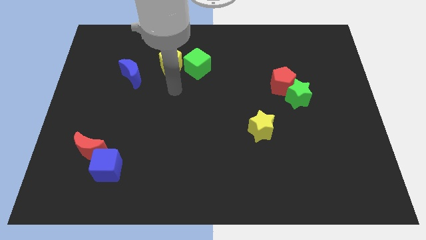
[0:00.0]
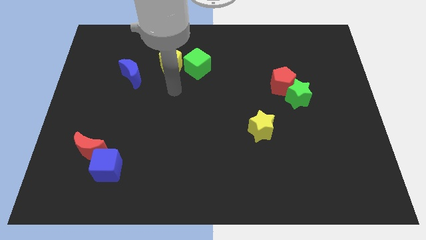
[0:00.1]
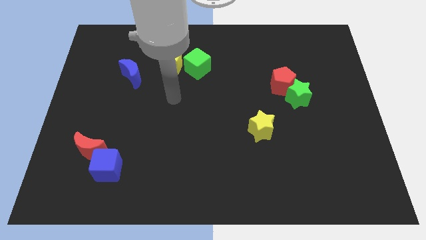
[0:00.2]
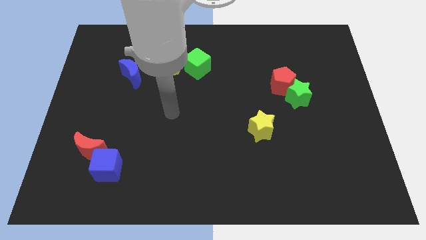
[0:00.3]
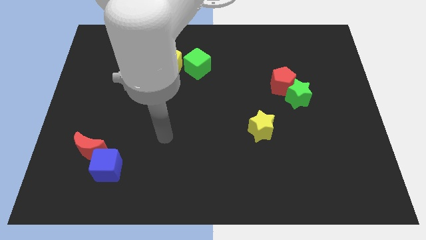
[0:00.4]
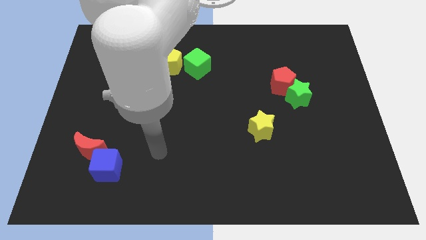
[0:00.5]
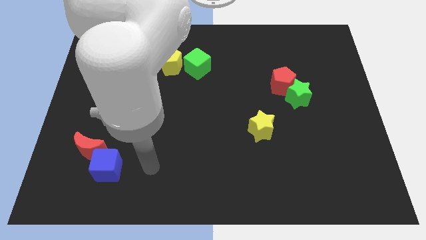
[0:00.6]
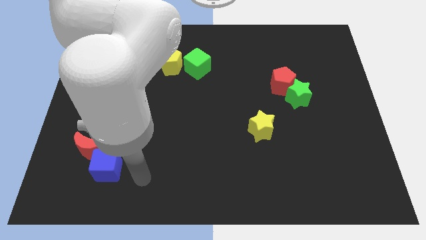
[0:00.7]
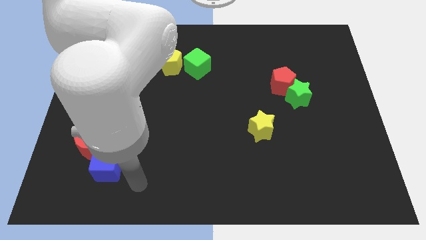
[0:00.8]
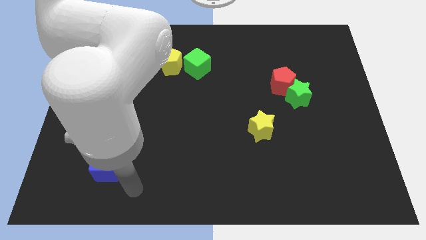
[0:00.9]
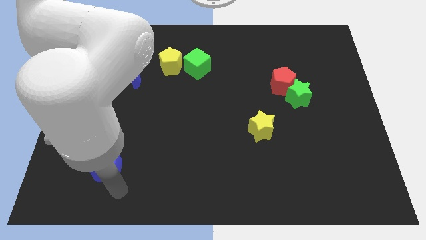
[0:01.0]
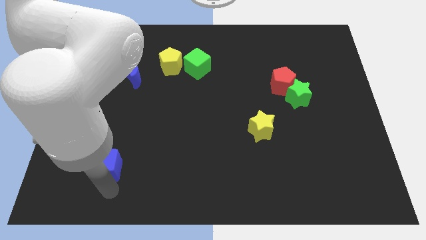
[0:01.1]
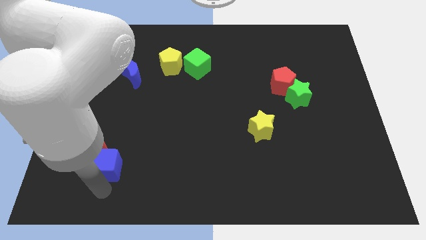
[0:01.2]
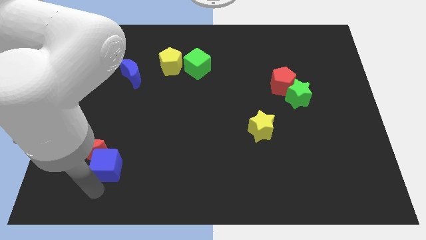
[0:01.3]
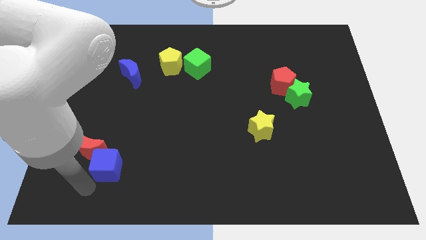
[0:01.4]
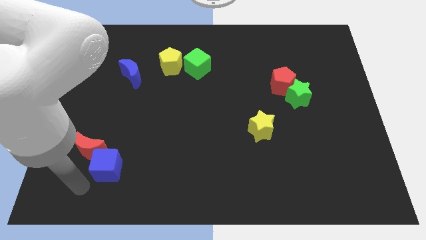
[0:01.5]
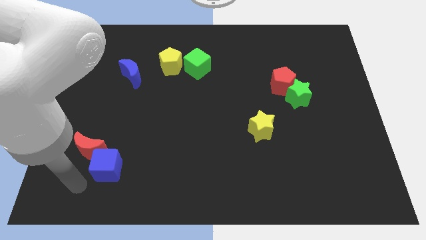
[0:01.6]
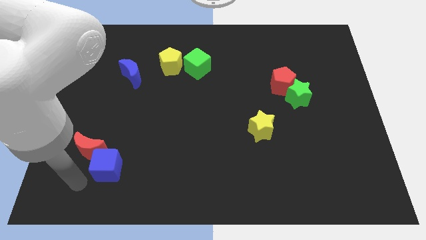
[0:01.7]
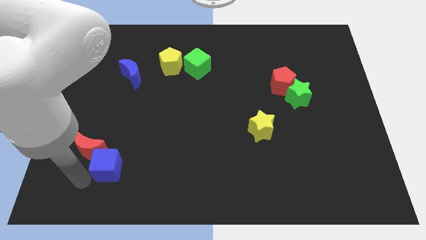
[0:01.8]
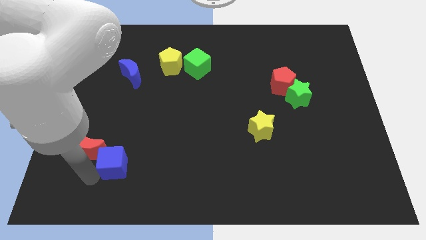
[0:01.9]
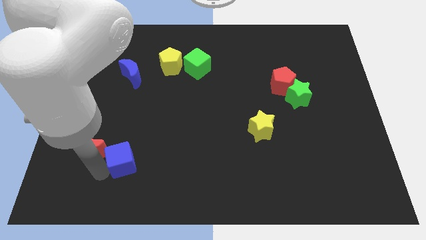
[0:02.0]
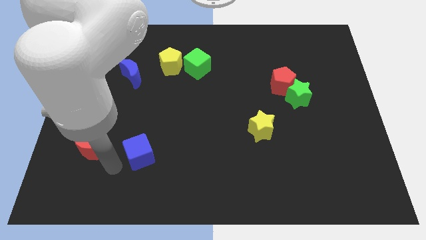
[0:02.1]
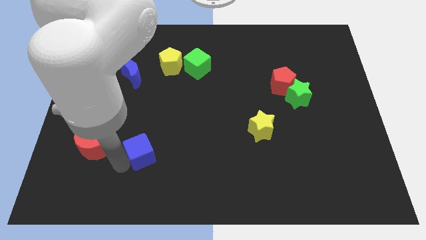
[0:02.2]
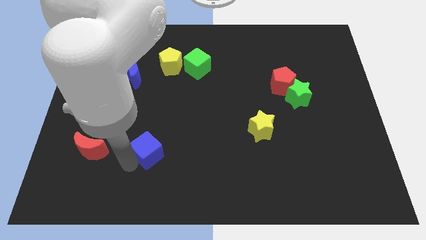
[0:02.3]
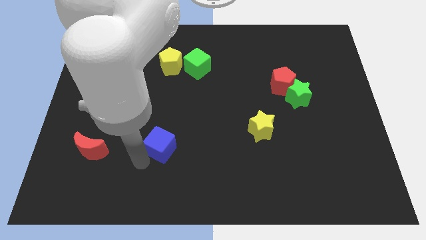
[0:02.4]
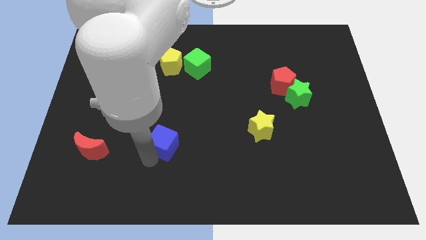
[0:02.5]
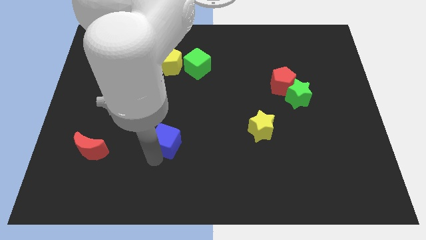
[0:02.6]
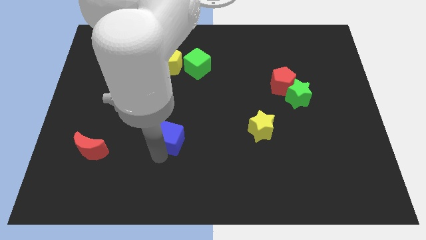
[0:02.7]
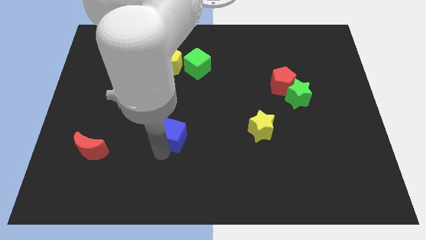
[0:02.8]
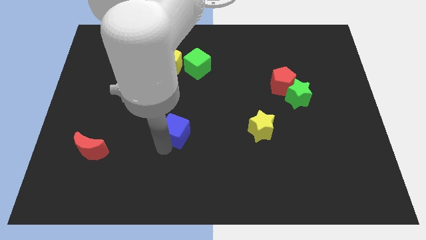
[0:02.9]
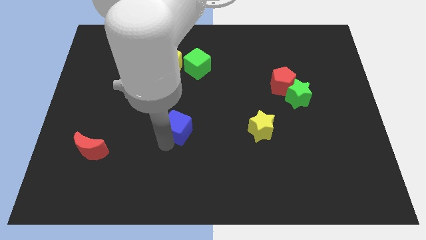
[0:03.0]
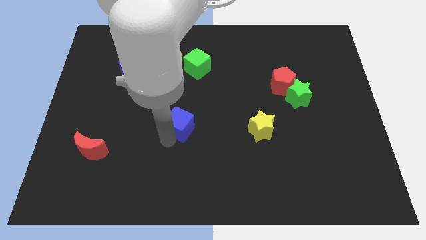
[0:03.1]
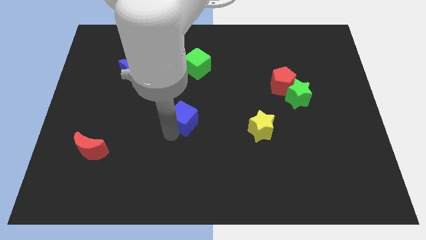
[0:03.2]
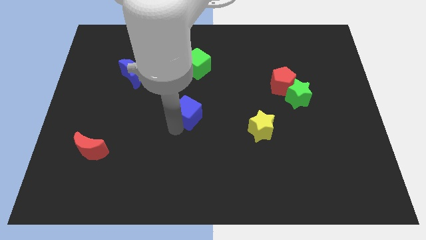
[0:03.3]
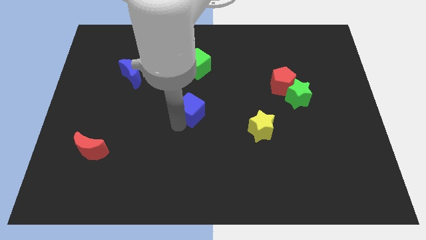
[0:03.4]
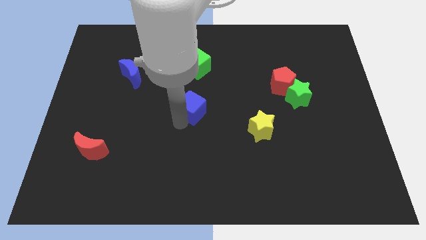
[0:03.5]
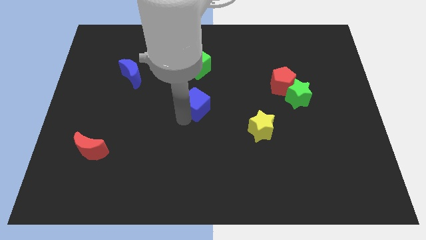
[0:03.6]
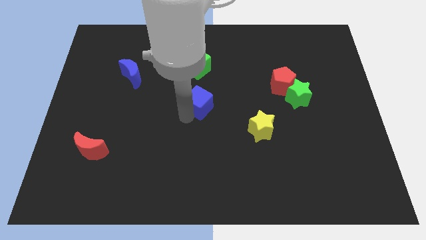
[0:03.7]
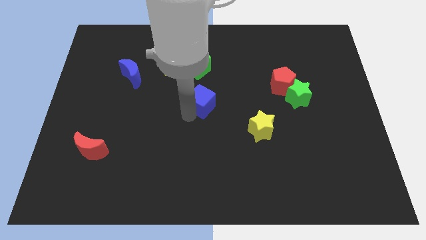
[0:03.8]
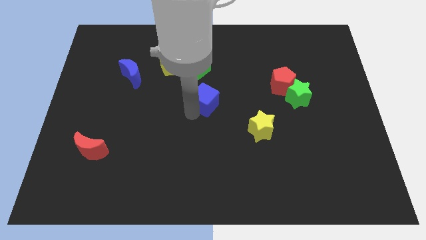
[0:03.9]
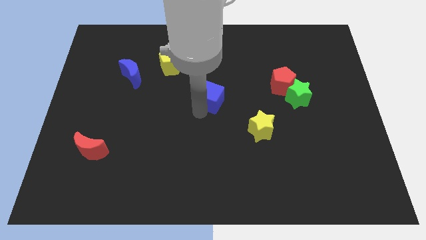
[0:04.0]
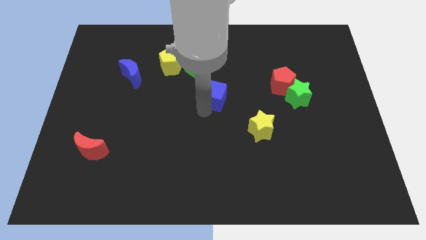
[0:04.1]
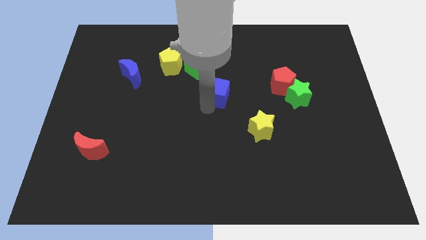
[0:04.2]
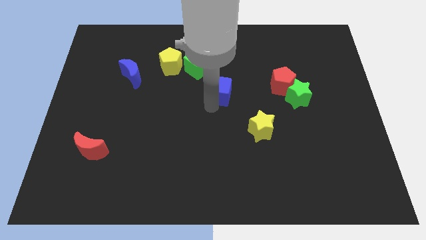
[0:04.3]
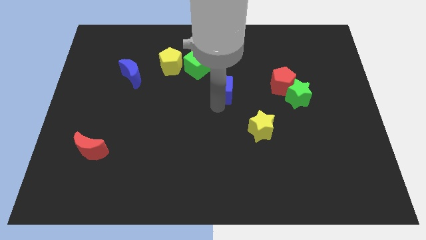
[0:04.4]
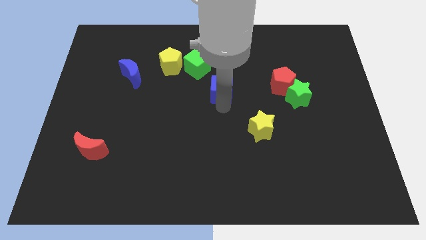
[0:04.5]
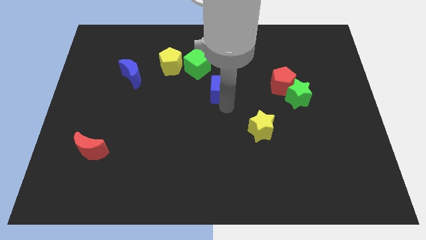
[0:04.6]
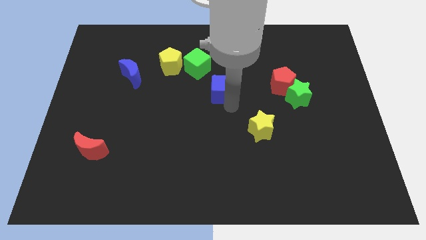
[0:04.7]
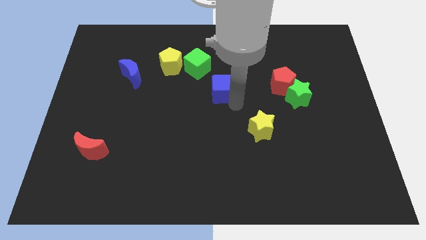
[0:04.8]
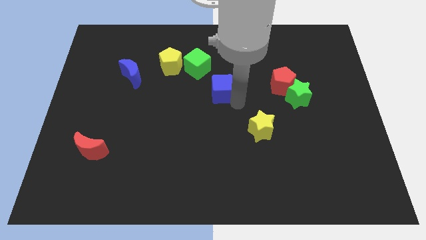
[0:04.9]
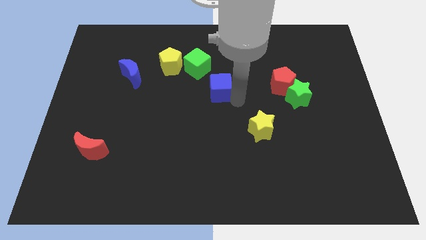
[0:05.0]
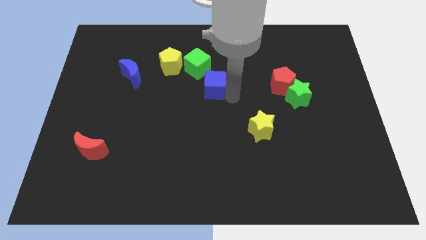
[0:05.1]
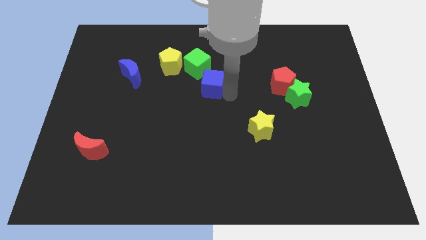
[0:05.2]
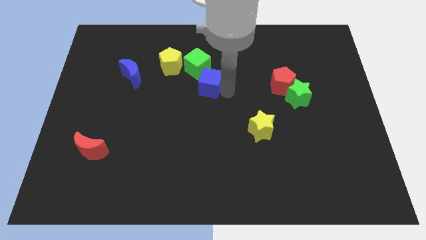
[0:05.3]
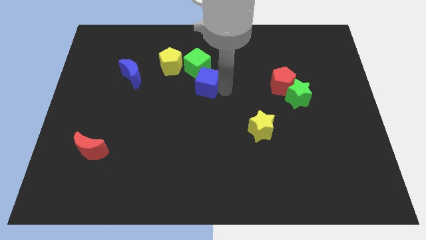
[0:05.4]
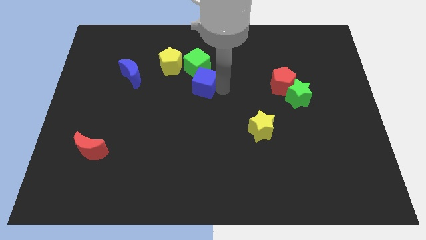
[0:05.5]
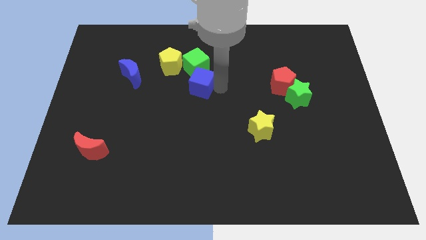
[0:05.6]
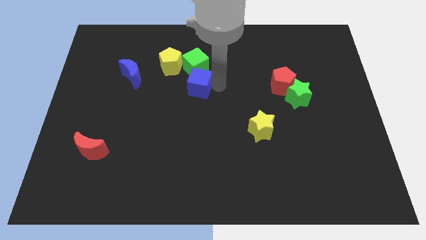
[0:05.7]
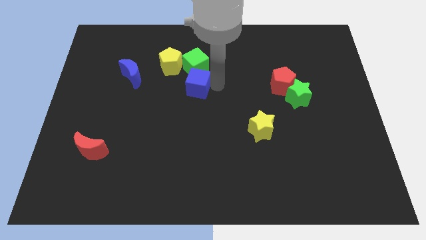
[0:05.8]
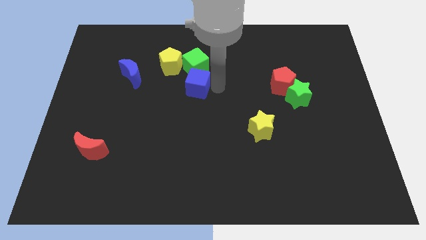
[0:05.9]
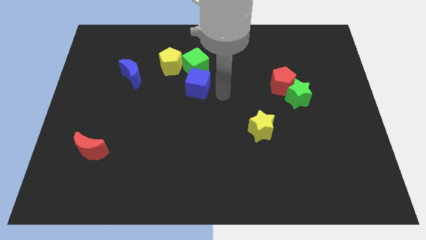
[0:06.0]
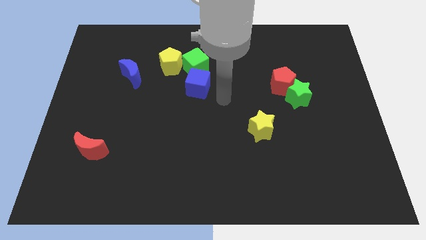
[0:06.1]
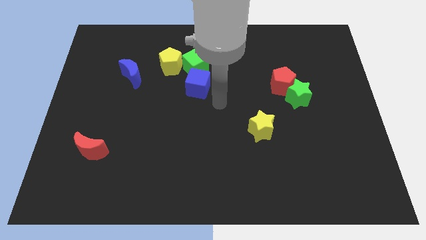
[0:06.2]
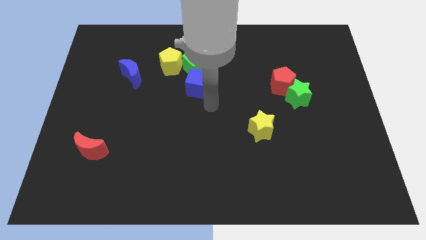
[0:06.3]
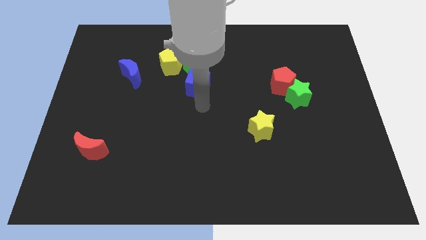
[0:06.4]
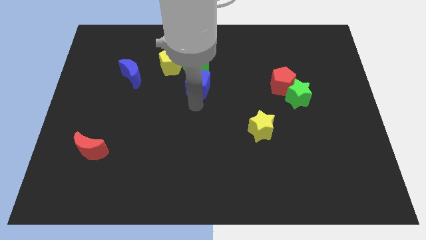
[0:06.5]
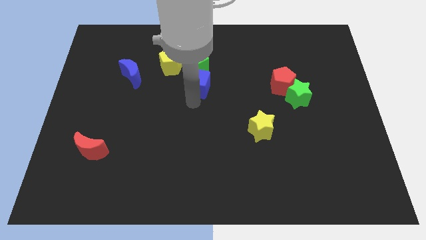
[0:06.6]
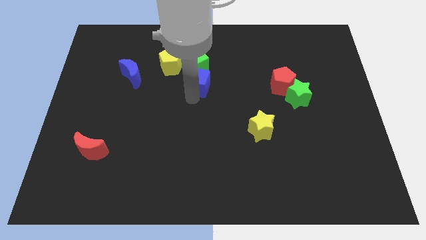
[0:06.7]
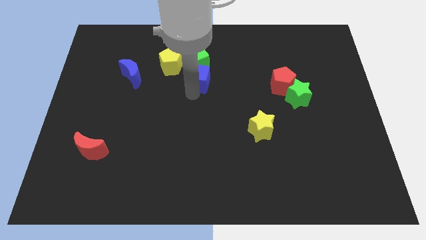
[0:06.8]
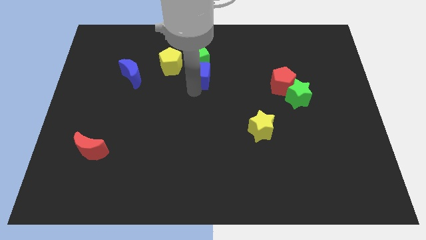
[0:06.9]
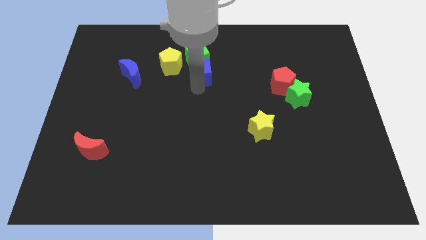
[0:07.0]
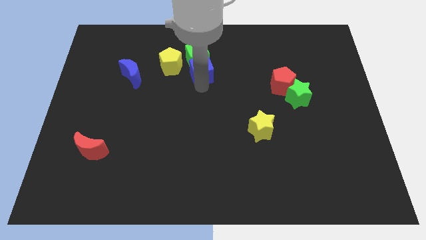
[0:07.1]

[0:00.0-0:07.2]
slide the blue cube close to the green cube

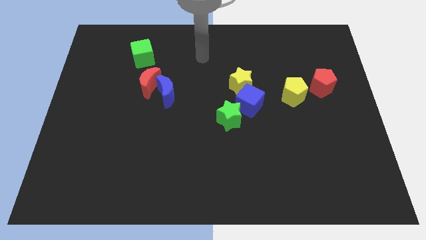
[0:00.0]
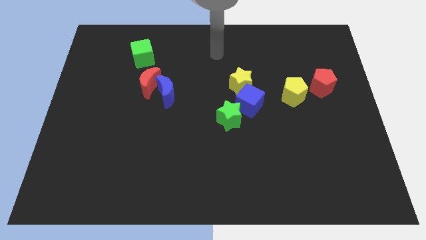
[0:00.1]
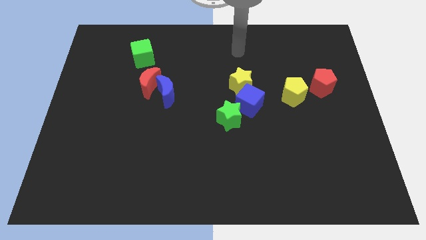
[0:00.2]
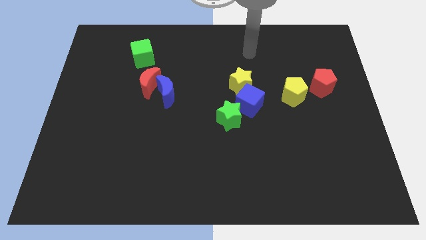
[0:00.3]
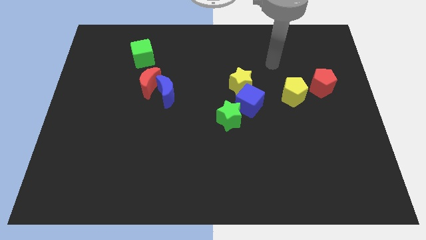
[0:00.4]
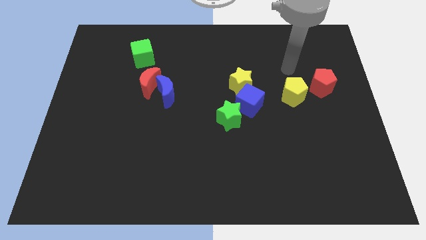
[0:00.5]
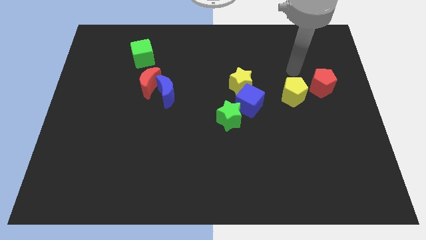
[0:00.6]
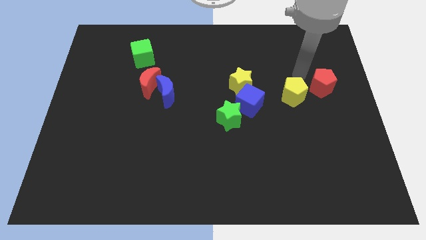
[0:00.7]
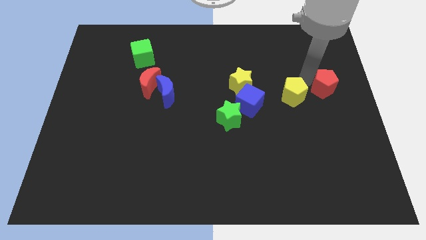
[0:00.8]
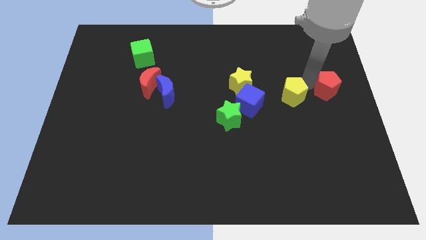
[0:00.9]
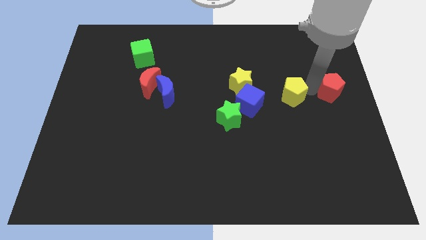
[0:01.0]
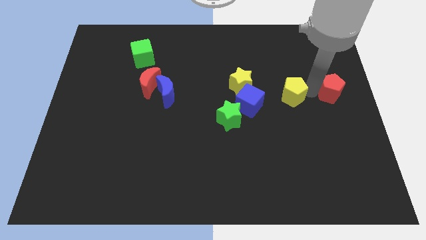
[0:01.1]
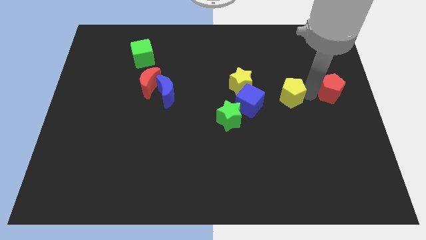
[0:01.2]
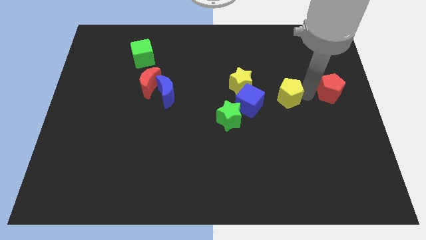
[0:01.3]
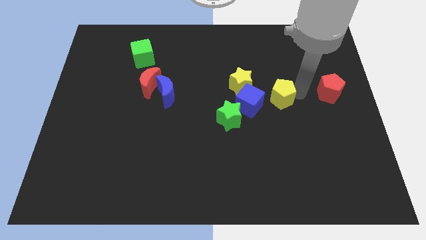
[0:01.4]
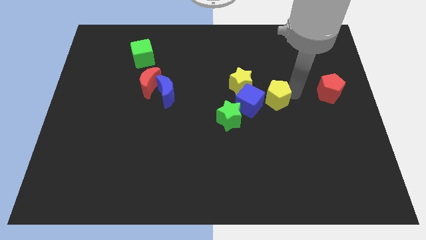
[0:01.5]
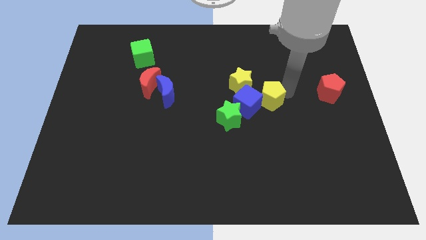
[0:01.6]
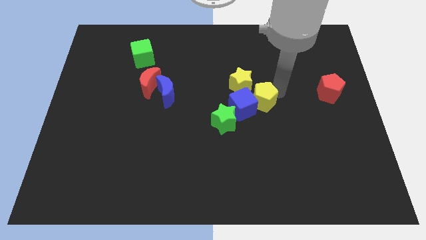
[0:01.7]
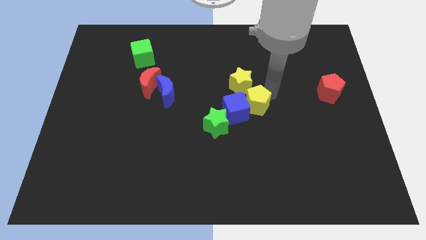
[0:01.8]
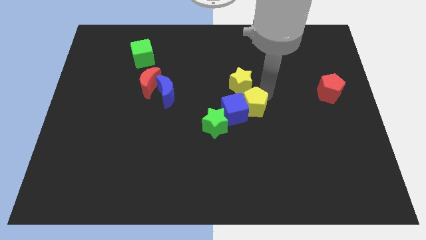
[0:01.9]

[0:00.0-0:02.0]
move the yellow pentagon to the blue cube
